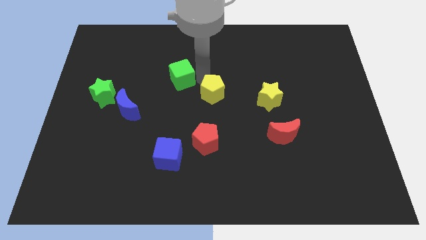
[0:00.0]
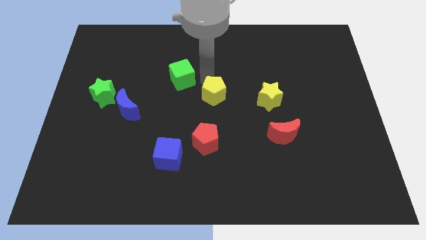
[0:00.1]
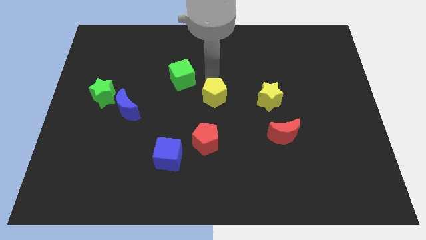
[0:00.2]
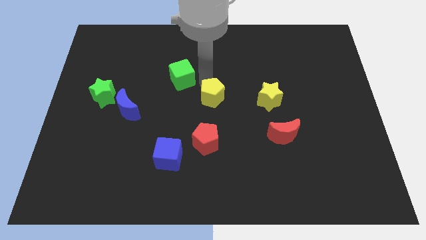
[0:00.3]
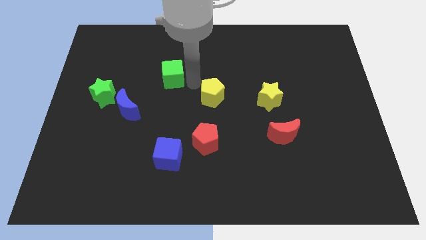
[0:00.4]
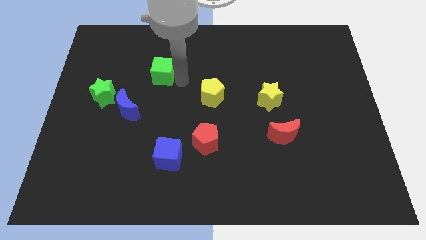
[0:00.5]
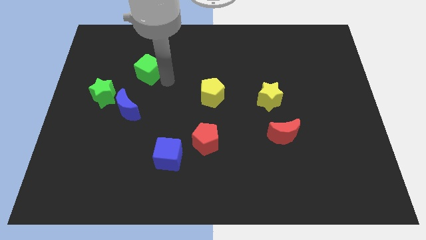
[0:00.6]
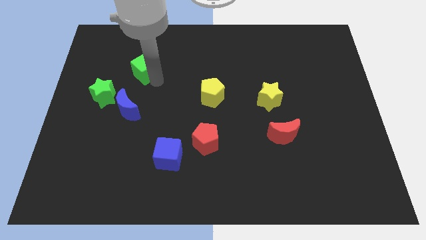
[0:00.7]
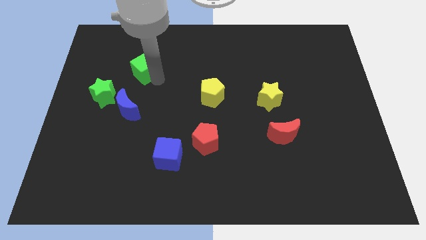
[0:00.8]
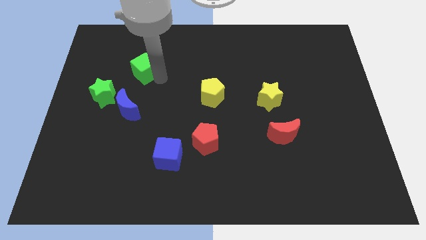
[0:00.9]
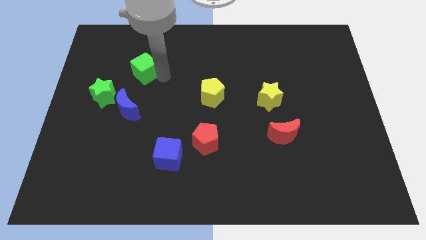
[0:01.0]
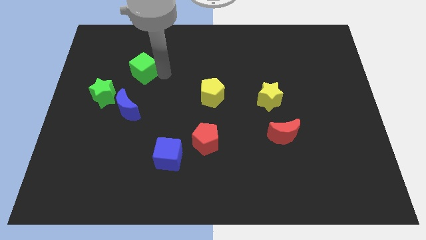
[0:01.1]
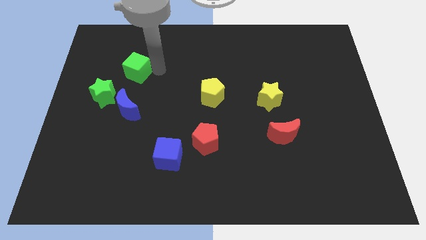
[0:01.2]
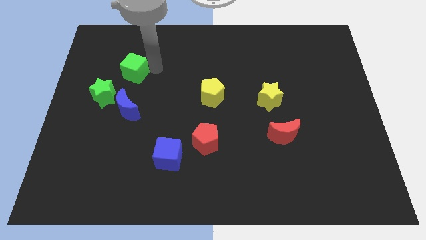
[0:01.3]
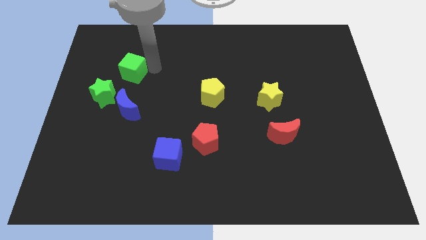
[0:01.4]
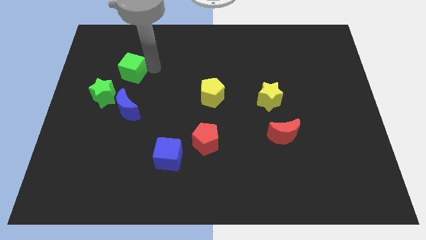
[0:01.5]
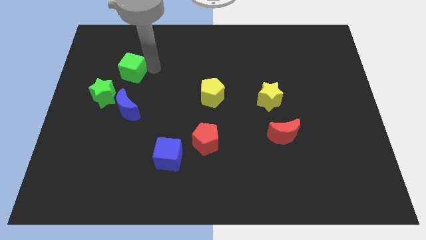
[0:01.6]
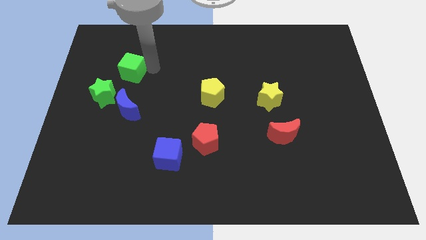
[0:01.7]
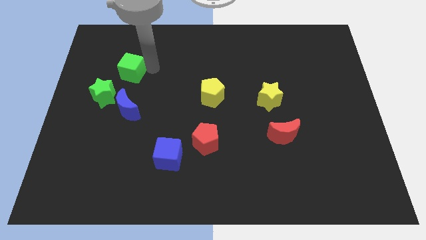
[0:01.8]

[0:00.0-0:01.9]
push the green cube to top of the blue crescent

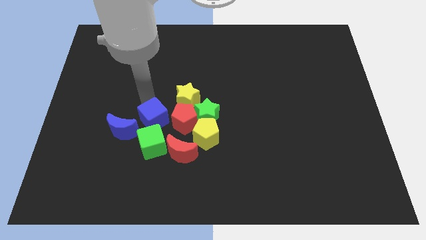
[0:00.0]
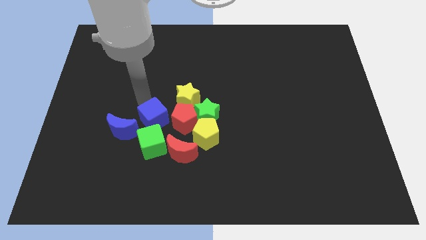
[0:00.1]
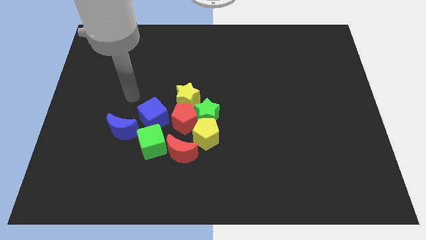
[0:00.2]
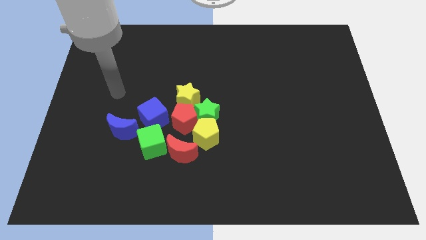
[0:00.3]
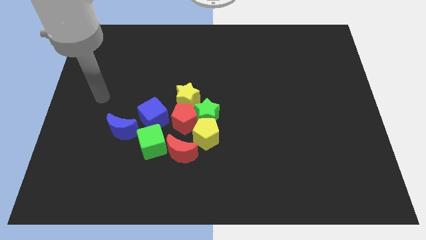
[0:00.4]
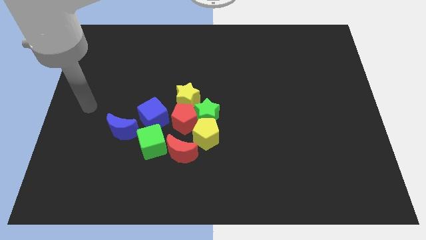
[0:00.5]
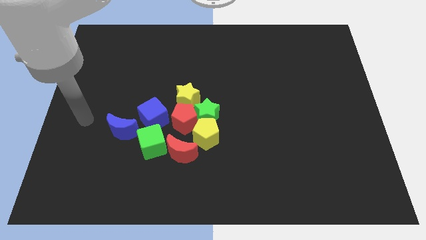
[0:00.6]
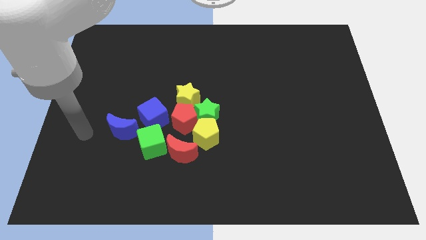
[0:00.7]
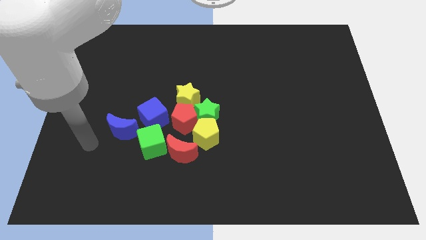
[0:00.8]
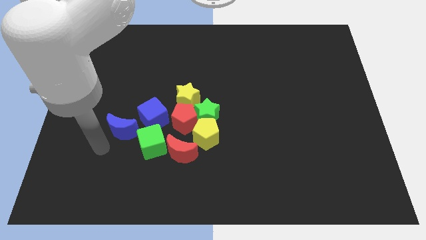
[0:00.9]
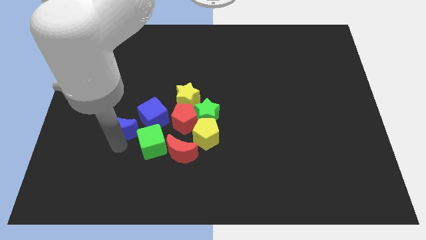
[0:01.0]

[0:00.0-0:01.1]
move your arm towards the blue crescent

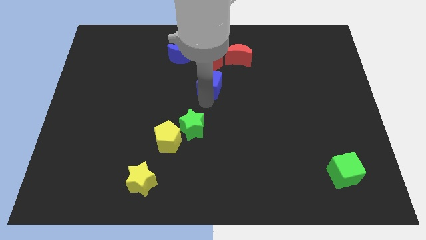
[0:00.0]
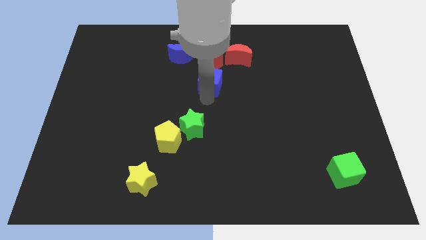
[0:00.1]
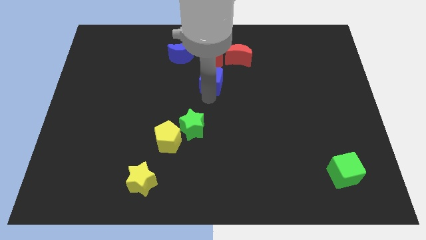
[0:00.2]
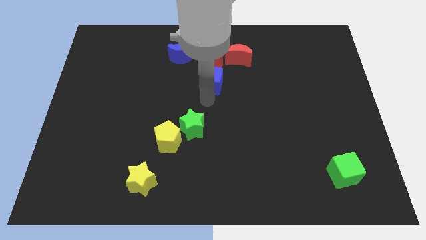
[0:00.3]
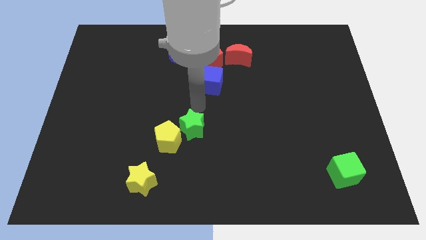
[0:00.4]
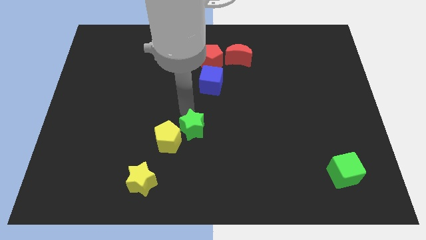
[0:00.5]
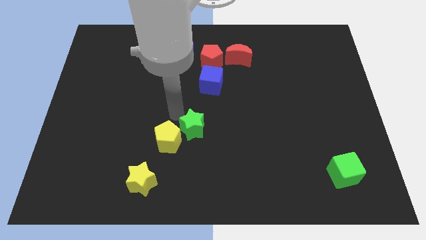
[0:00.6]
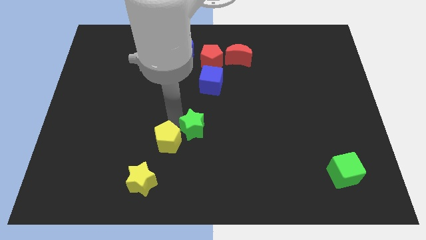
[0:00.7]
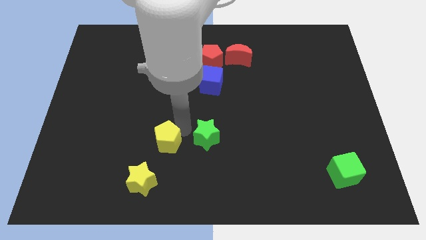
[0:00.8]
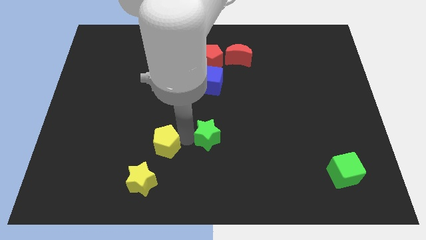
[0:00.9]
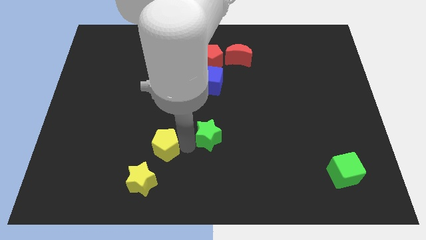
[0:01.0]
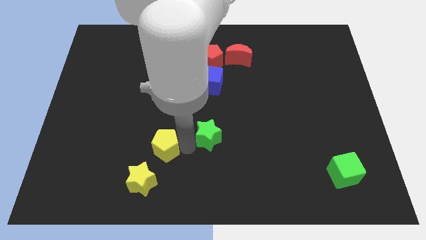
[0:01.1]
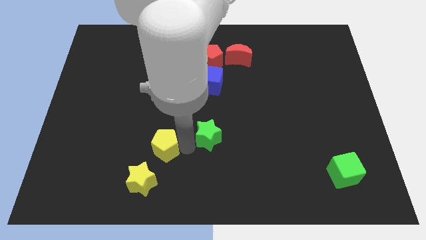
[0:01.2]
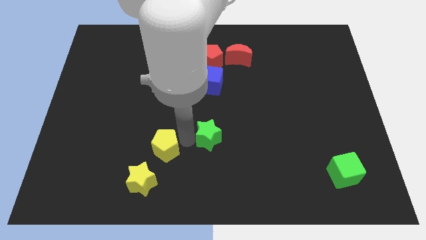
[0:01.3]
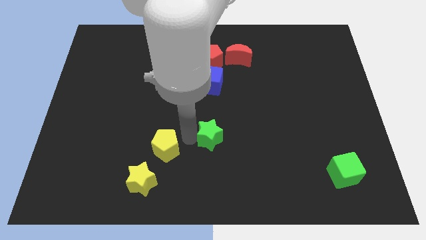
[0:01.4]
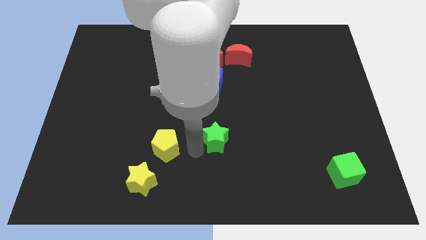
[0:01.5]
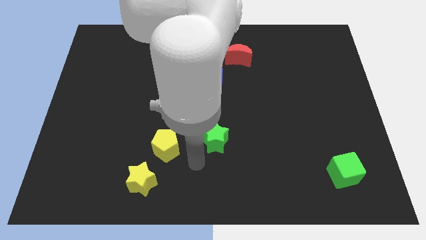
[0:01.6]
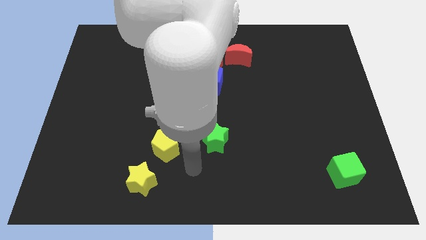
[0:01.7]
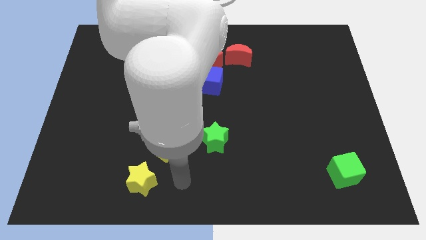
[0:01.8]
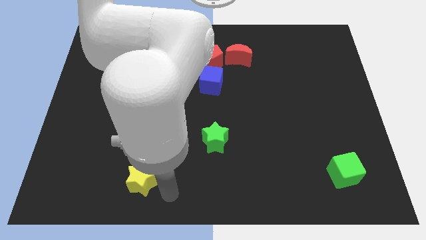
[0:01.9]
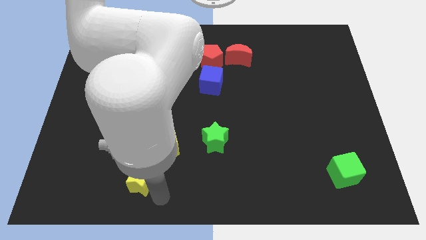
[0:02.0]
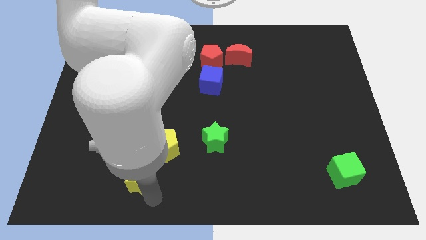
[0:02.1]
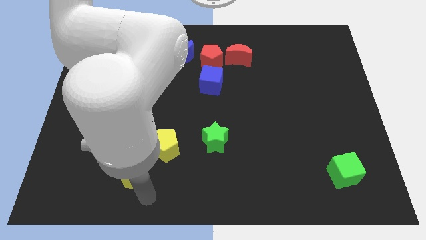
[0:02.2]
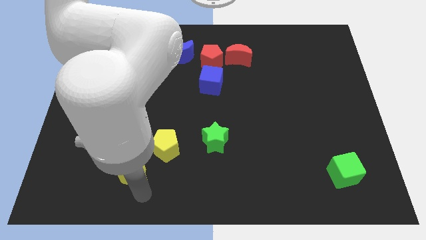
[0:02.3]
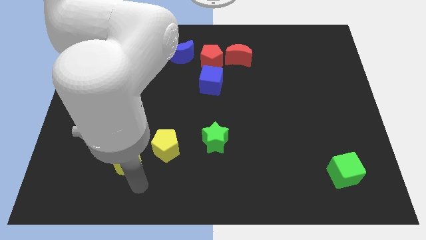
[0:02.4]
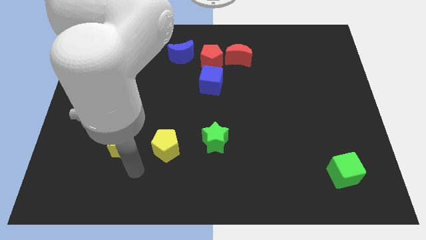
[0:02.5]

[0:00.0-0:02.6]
push the yellow star left to the yellow pentagon

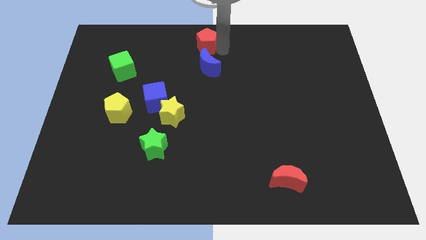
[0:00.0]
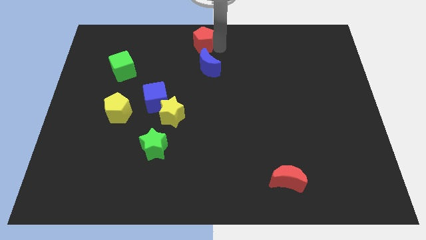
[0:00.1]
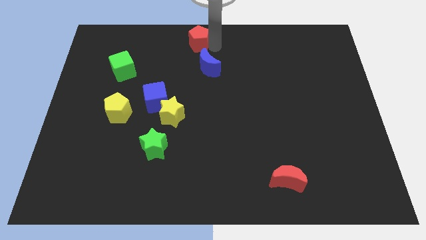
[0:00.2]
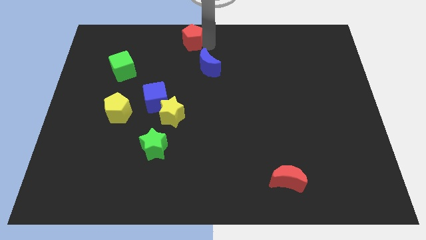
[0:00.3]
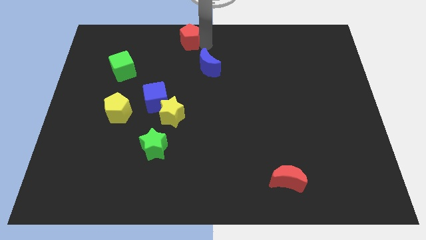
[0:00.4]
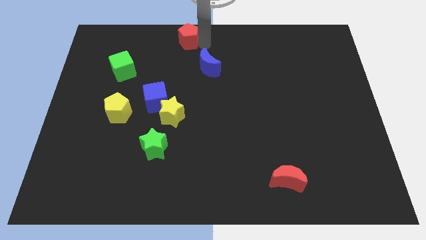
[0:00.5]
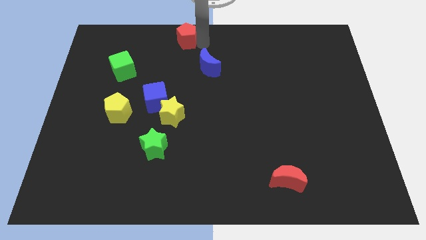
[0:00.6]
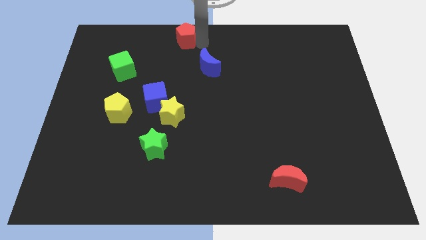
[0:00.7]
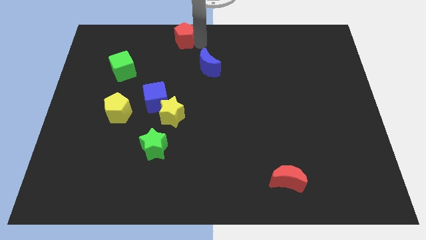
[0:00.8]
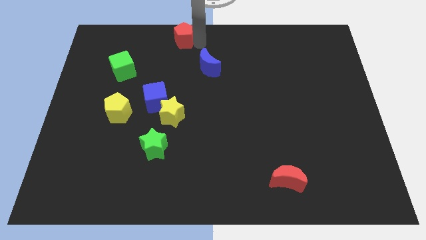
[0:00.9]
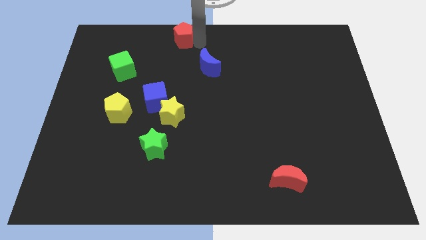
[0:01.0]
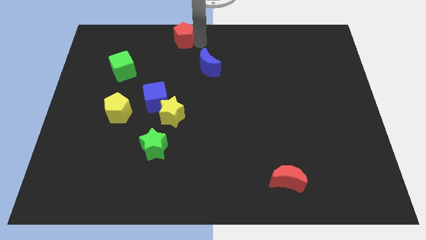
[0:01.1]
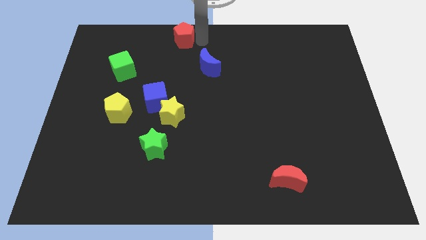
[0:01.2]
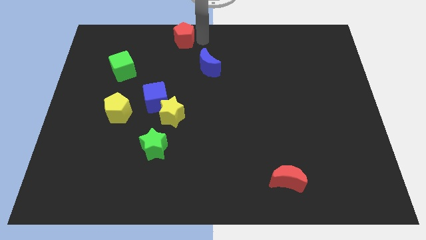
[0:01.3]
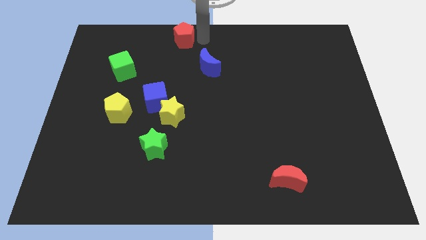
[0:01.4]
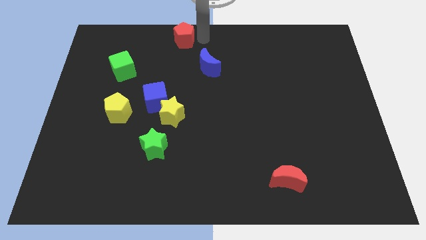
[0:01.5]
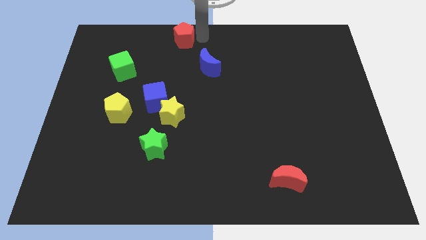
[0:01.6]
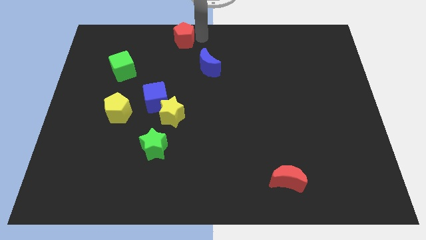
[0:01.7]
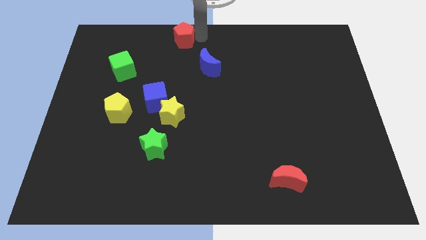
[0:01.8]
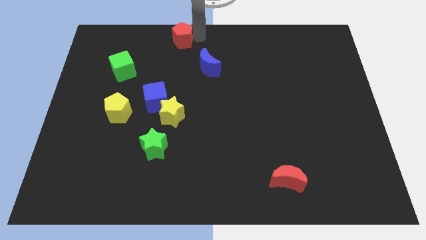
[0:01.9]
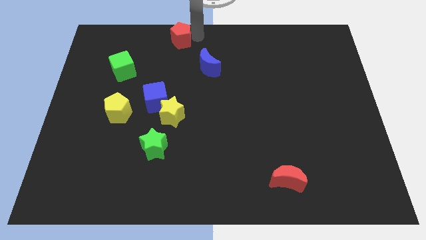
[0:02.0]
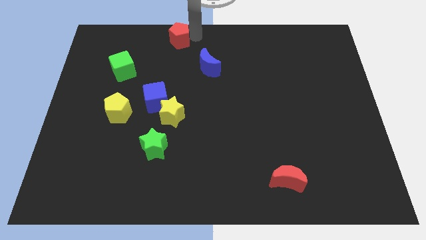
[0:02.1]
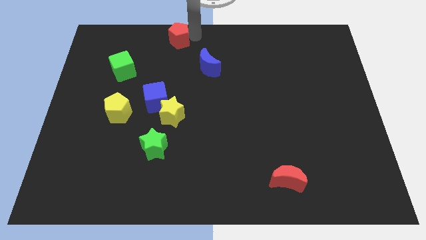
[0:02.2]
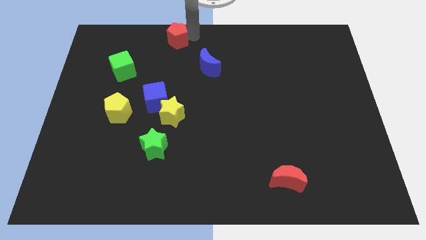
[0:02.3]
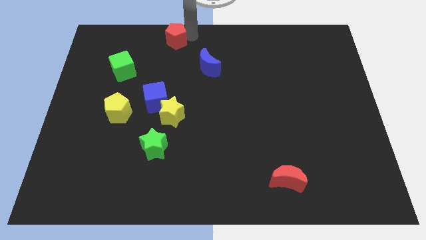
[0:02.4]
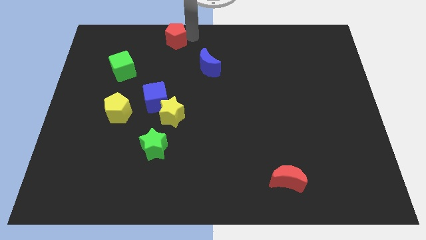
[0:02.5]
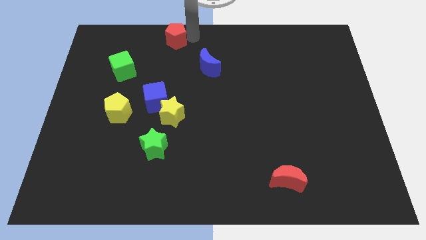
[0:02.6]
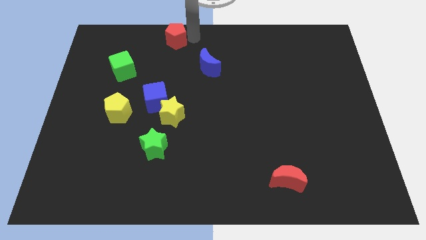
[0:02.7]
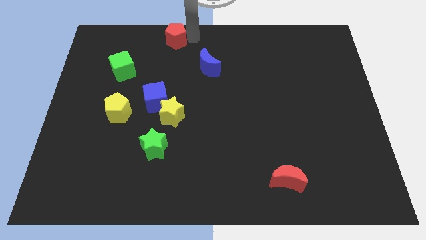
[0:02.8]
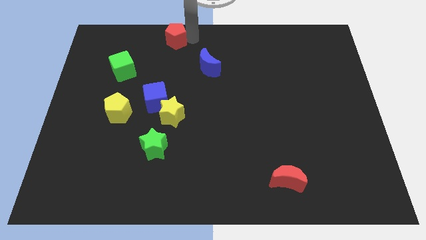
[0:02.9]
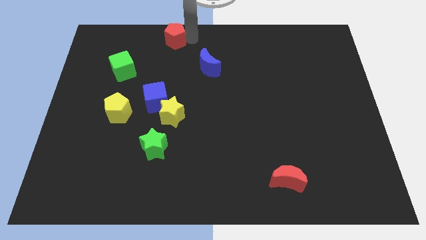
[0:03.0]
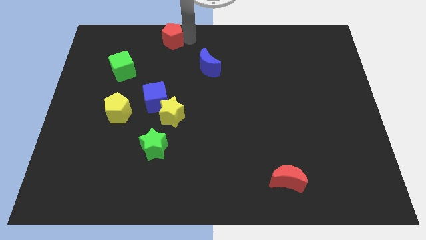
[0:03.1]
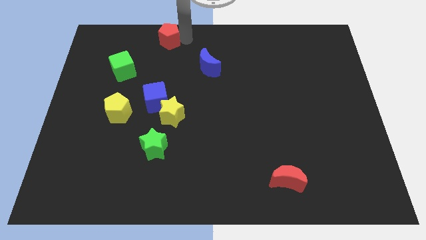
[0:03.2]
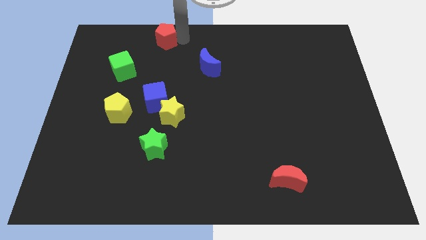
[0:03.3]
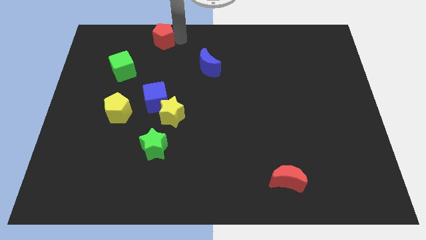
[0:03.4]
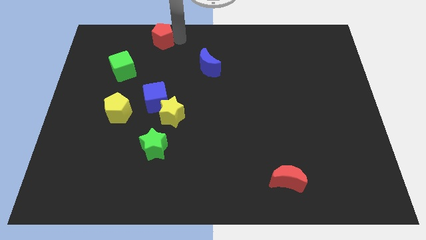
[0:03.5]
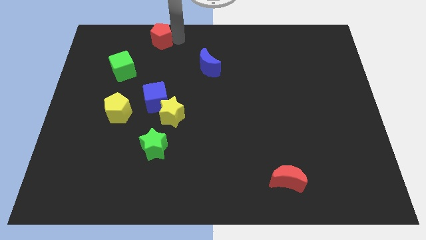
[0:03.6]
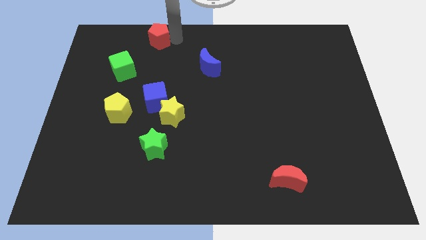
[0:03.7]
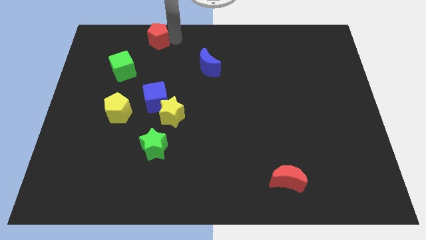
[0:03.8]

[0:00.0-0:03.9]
place the red pentagon vertically above the blue cube
